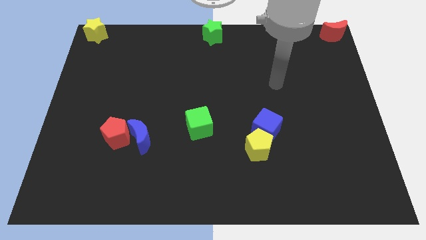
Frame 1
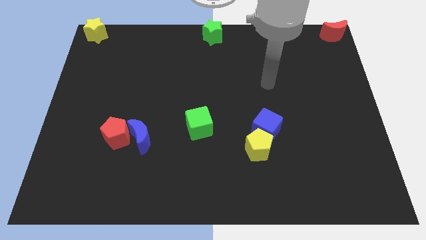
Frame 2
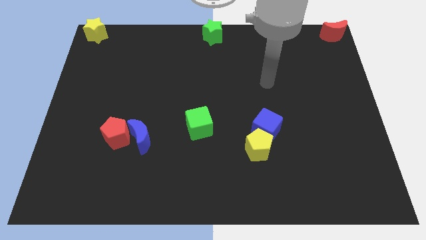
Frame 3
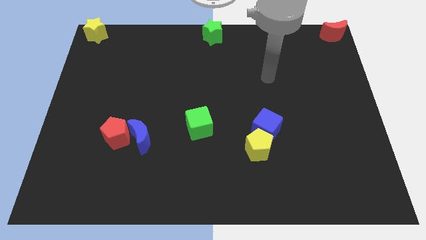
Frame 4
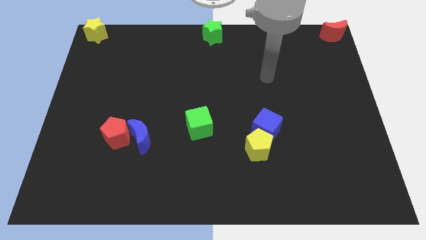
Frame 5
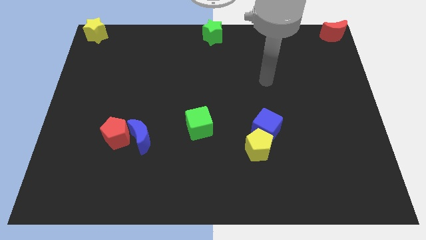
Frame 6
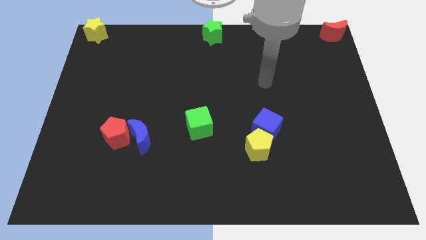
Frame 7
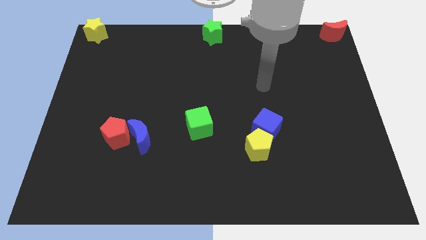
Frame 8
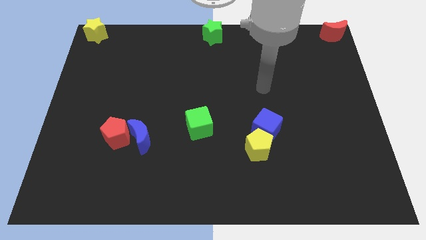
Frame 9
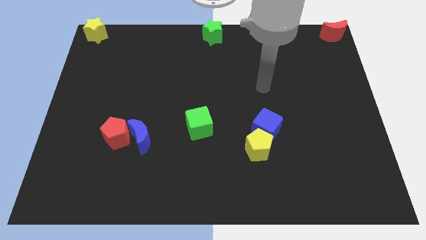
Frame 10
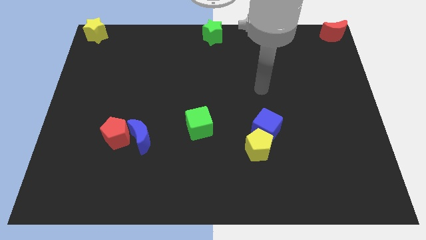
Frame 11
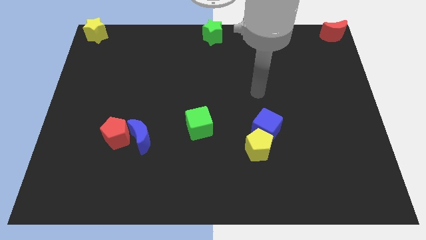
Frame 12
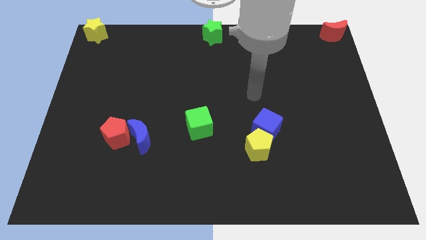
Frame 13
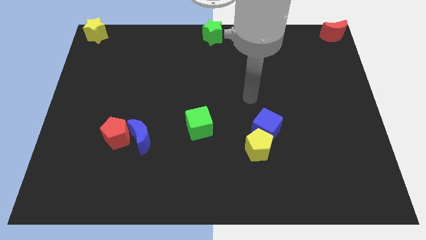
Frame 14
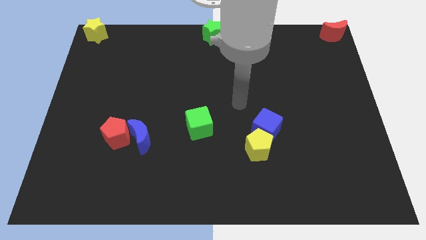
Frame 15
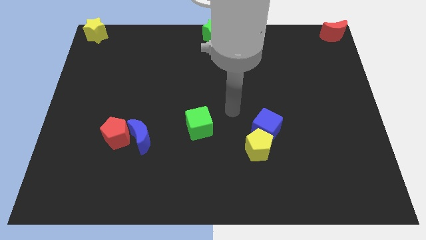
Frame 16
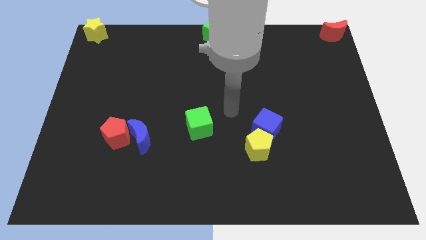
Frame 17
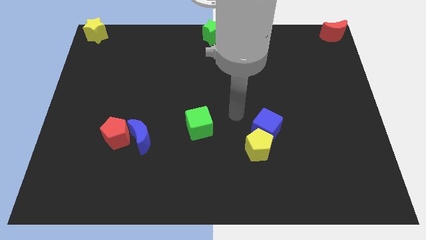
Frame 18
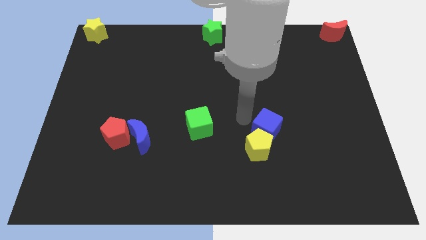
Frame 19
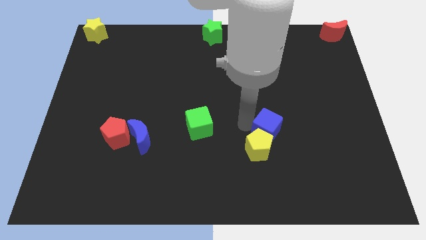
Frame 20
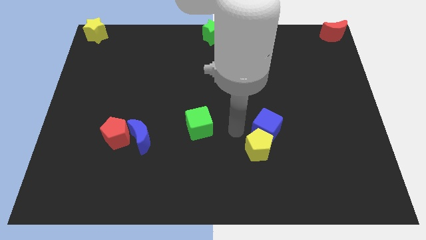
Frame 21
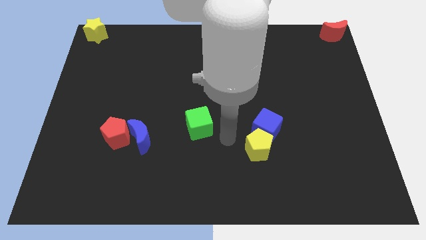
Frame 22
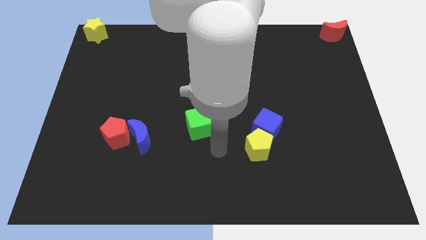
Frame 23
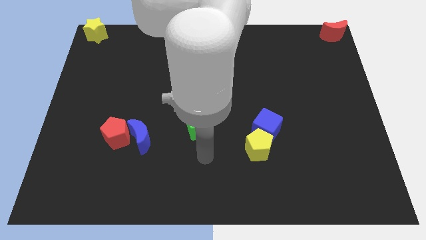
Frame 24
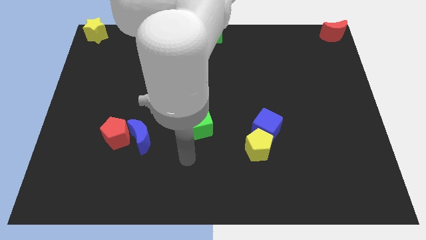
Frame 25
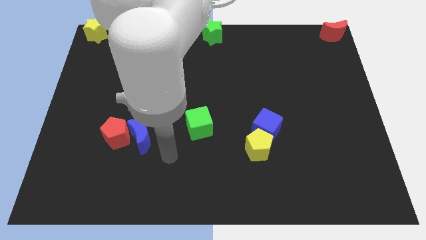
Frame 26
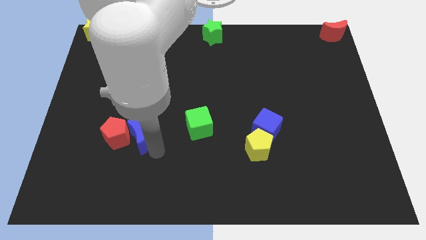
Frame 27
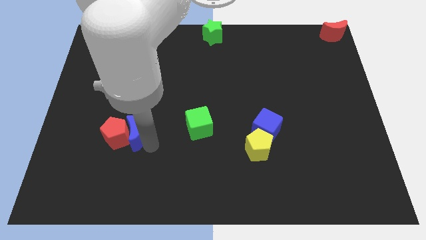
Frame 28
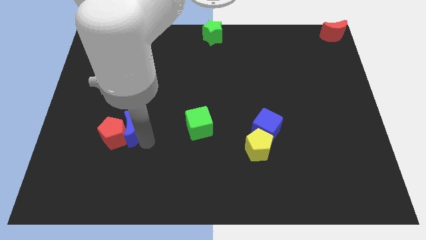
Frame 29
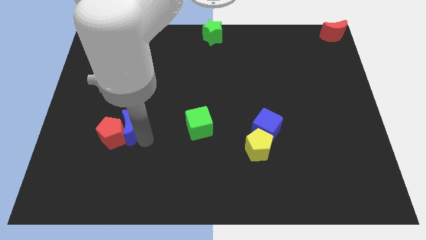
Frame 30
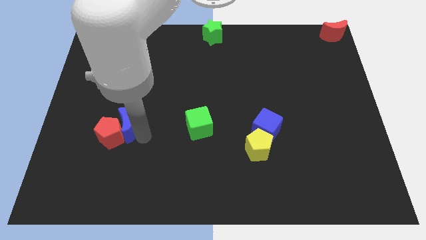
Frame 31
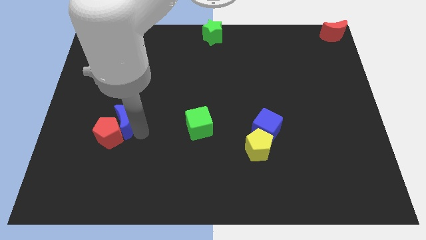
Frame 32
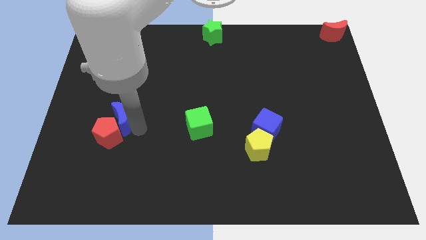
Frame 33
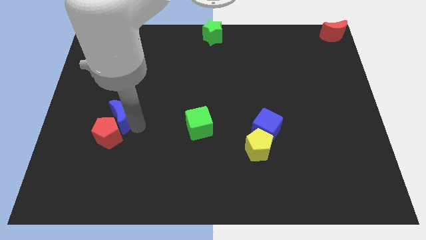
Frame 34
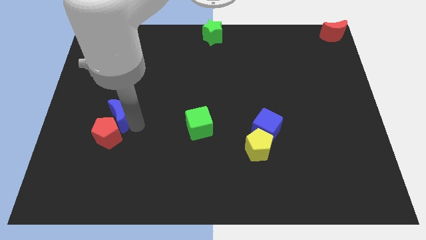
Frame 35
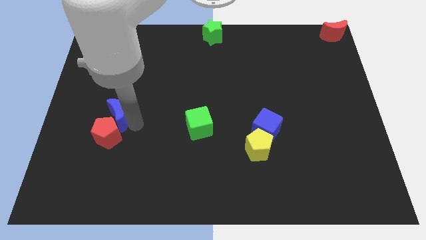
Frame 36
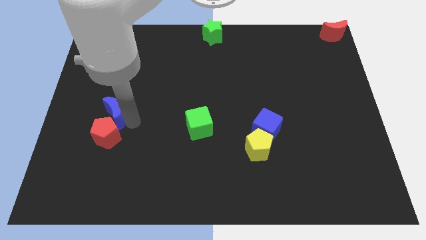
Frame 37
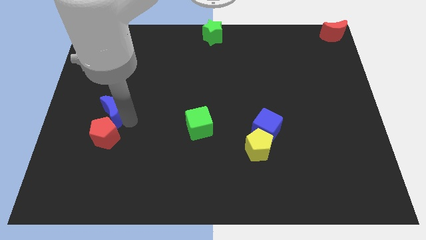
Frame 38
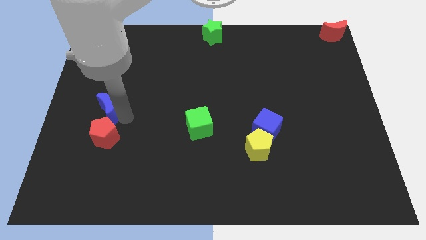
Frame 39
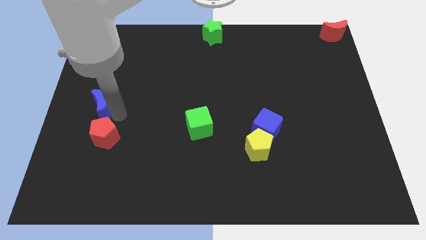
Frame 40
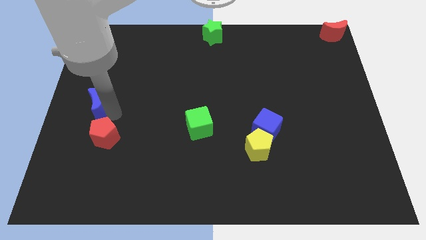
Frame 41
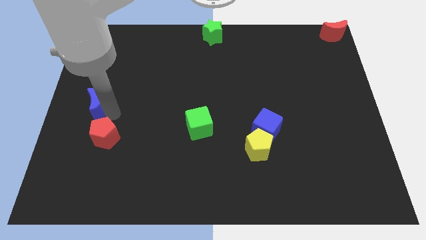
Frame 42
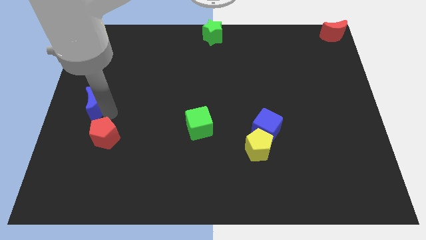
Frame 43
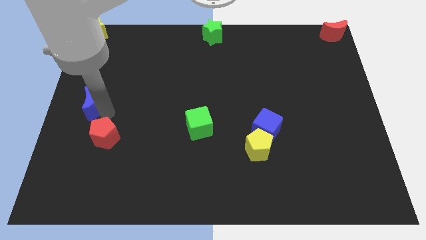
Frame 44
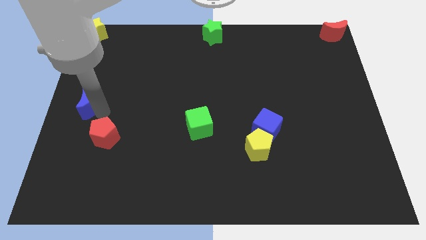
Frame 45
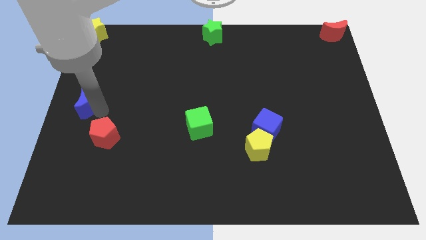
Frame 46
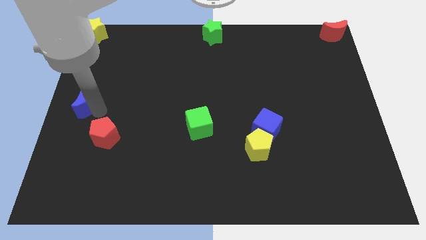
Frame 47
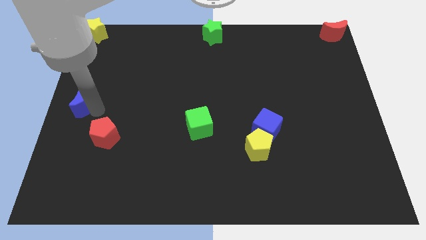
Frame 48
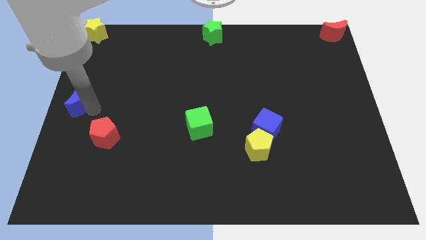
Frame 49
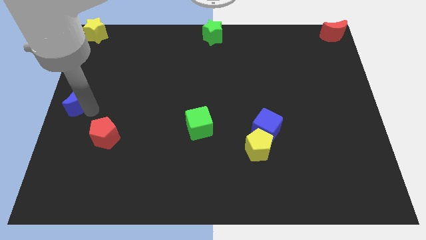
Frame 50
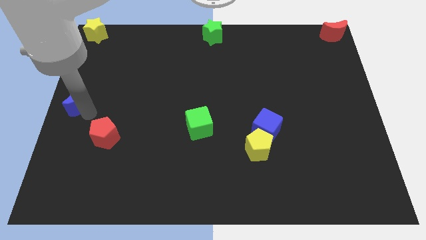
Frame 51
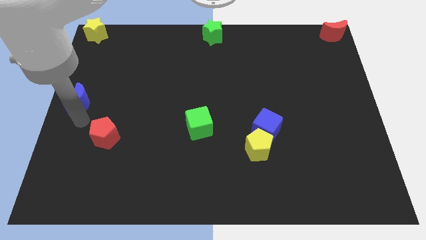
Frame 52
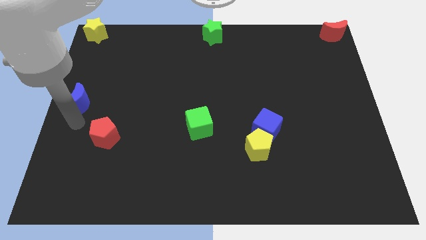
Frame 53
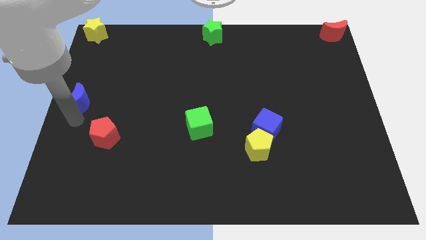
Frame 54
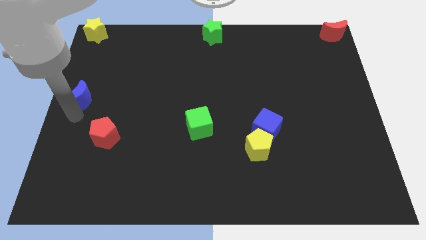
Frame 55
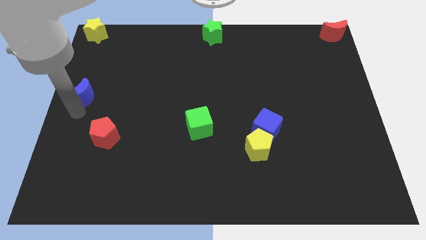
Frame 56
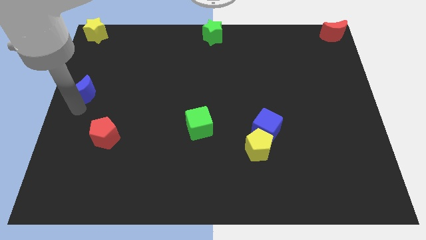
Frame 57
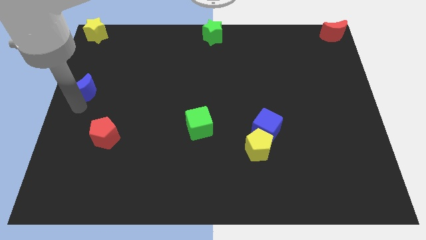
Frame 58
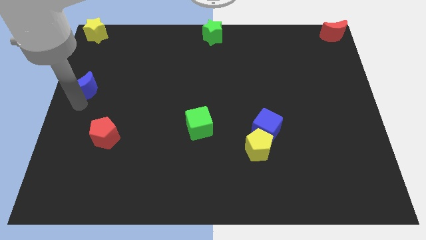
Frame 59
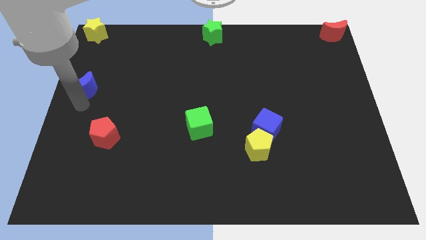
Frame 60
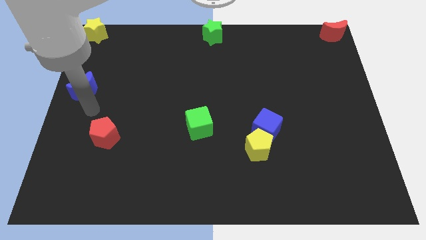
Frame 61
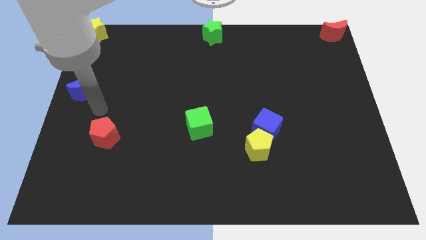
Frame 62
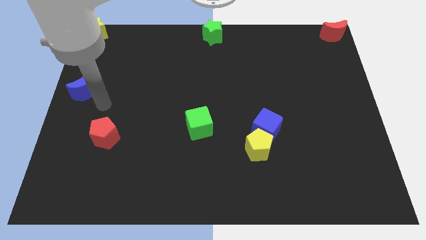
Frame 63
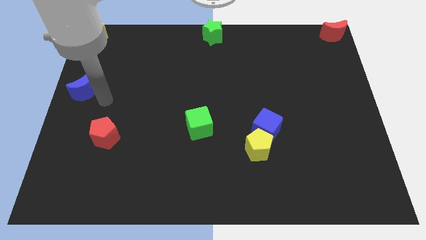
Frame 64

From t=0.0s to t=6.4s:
separate blue moon from the red pentagon

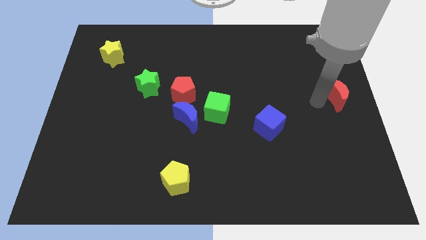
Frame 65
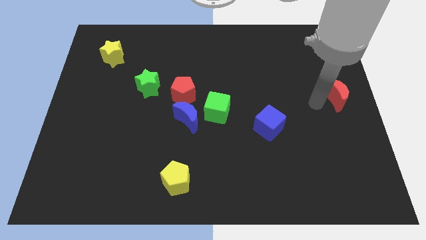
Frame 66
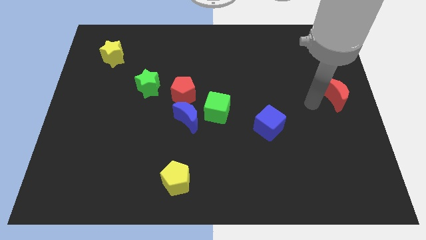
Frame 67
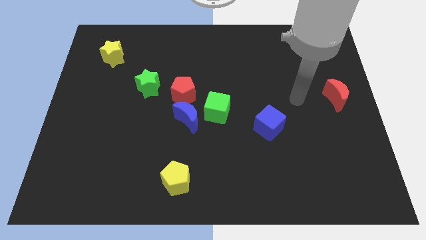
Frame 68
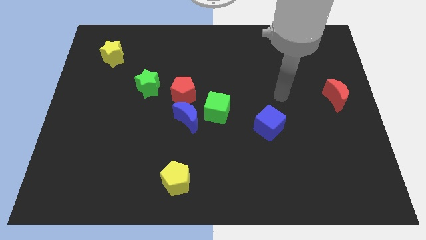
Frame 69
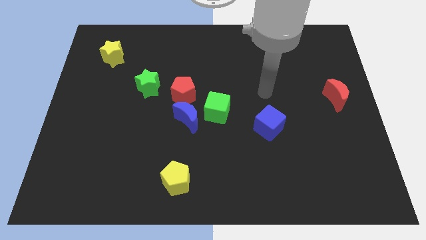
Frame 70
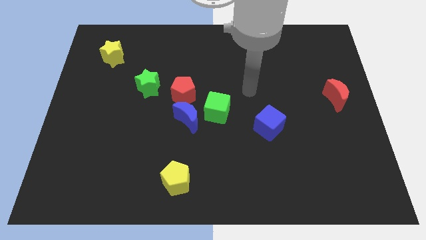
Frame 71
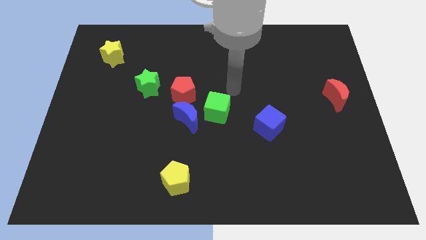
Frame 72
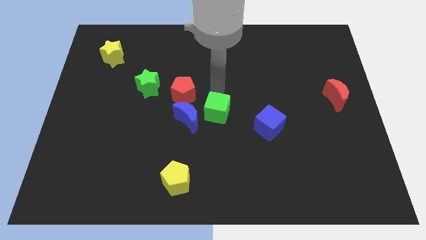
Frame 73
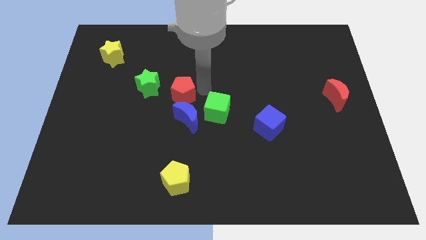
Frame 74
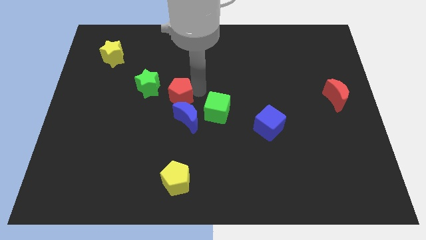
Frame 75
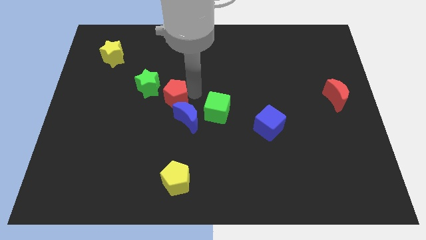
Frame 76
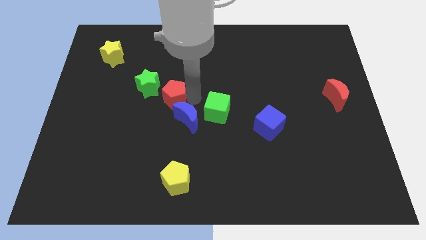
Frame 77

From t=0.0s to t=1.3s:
point the arm to the right of the red pentagon

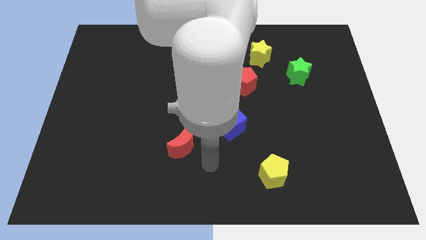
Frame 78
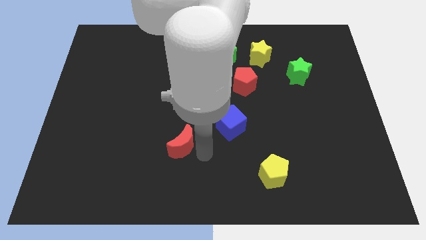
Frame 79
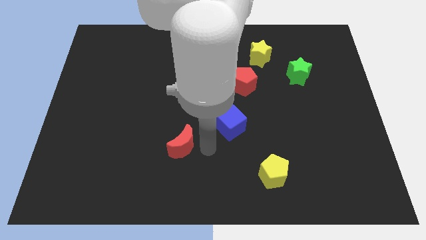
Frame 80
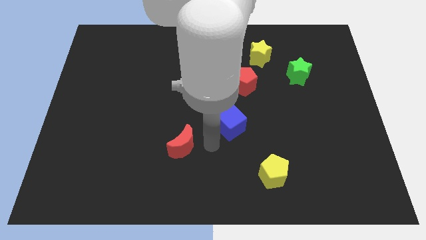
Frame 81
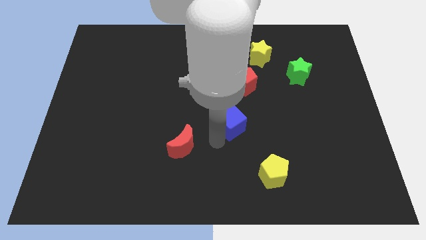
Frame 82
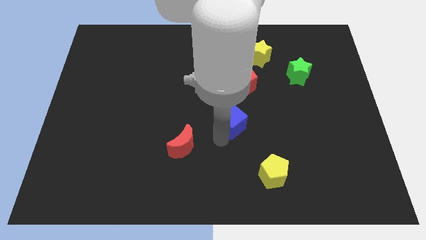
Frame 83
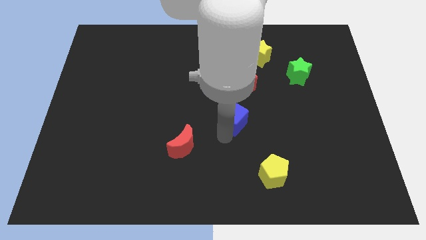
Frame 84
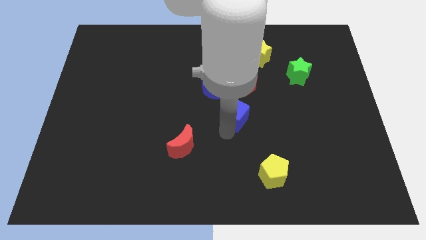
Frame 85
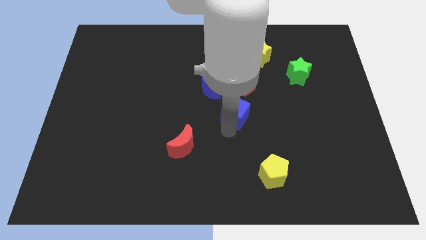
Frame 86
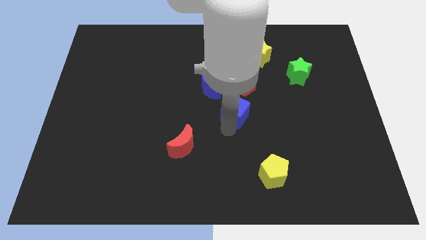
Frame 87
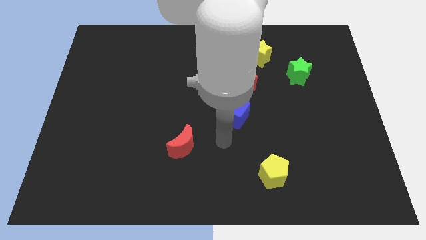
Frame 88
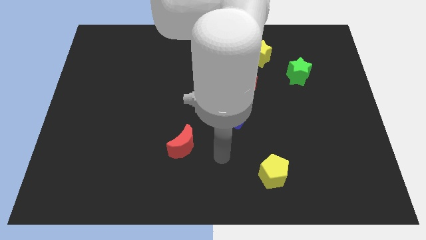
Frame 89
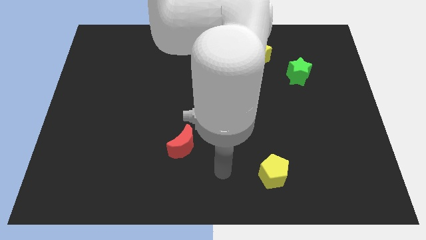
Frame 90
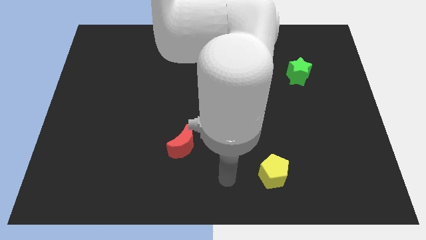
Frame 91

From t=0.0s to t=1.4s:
push the blue cube to the center
